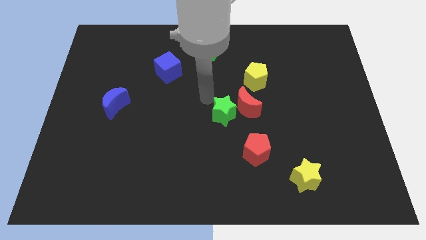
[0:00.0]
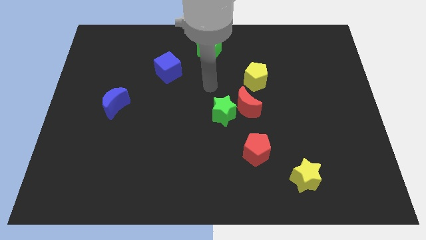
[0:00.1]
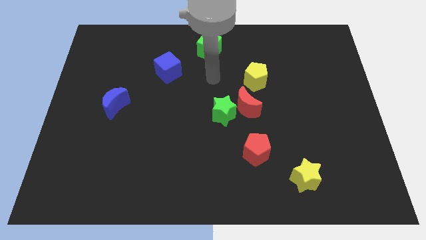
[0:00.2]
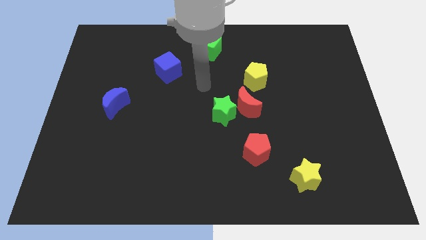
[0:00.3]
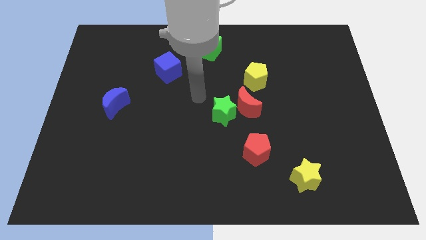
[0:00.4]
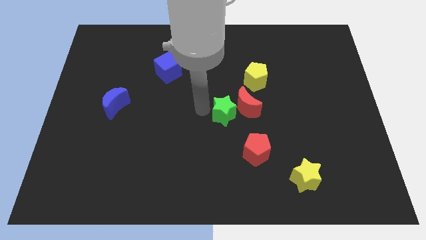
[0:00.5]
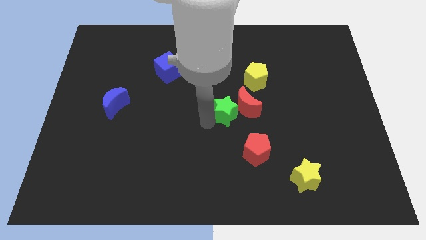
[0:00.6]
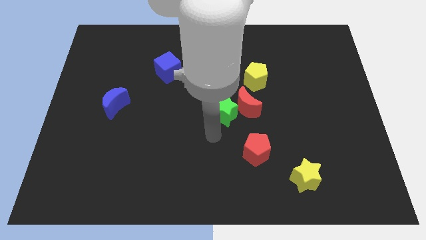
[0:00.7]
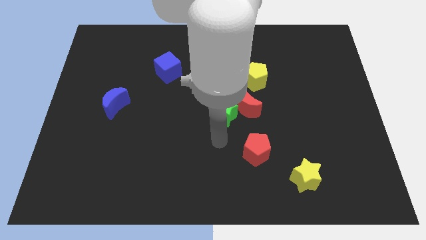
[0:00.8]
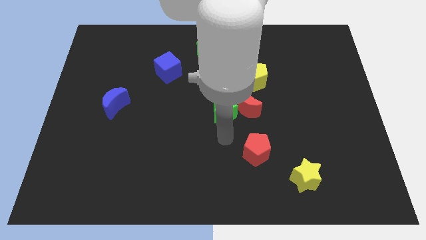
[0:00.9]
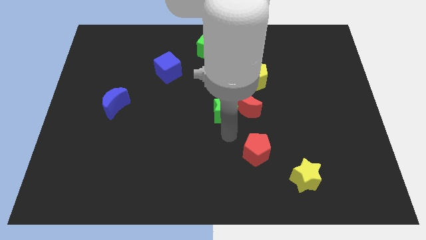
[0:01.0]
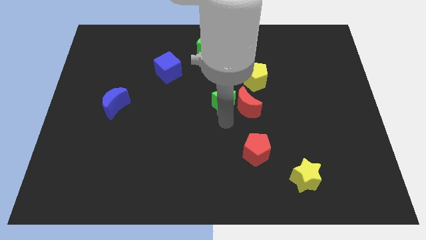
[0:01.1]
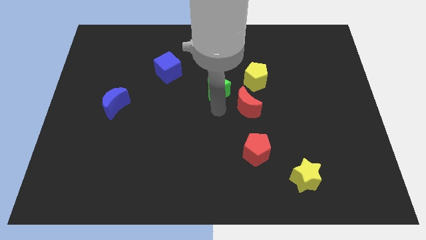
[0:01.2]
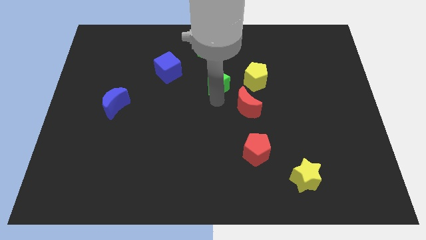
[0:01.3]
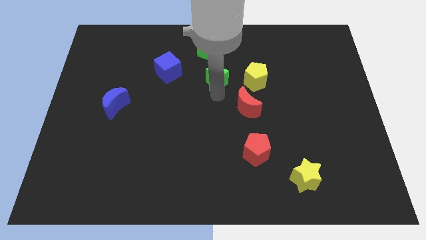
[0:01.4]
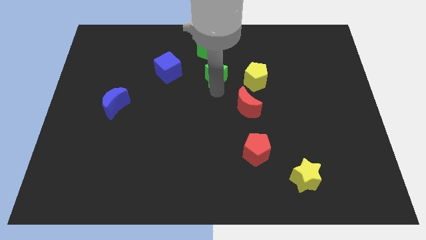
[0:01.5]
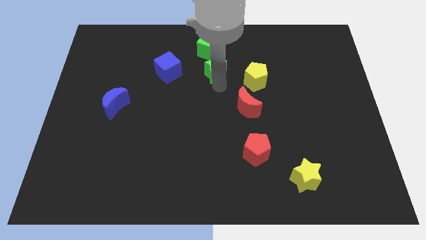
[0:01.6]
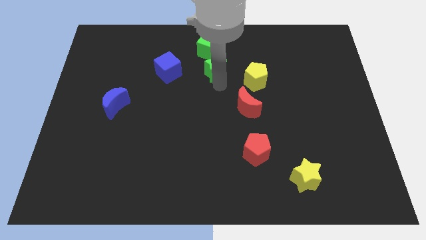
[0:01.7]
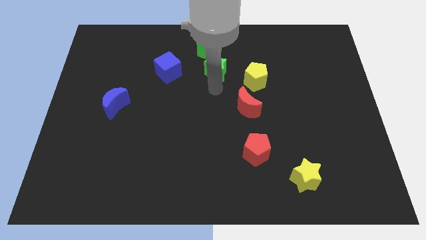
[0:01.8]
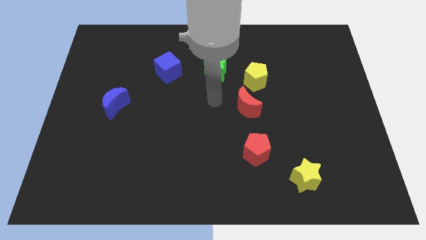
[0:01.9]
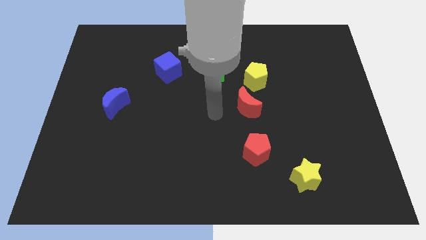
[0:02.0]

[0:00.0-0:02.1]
move the green star below the green cube

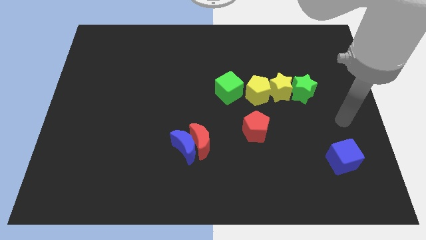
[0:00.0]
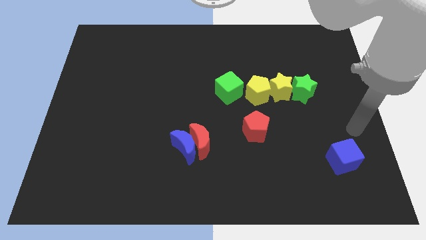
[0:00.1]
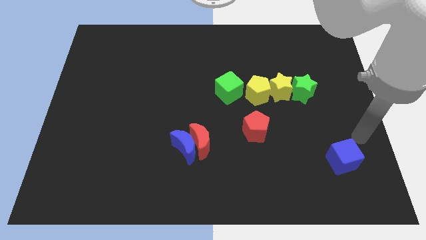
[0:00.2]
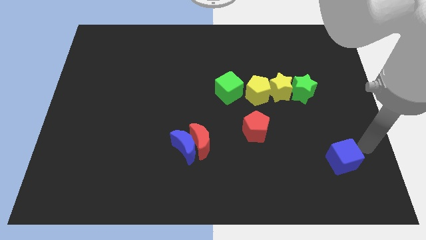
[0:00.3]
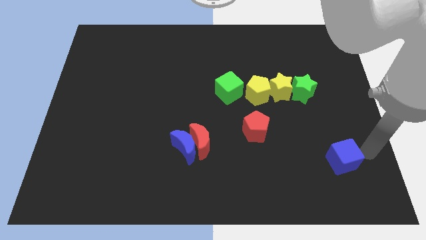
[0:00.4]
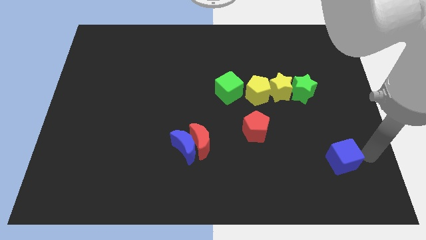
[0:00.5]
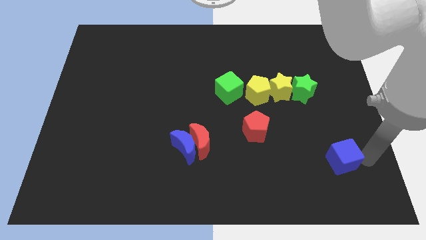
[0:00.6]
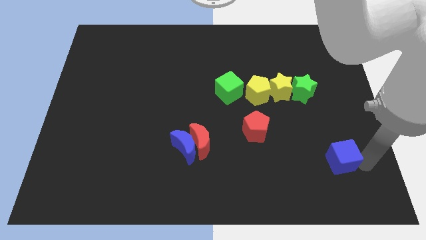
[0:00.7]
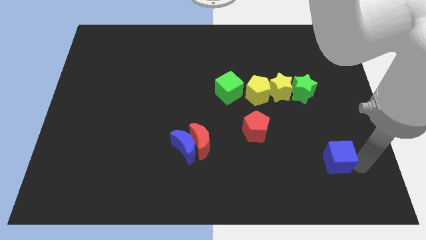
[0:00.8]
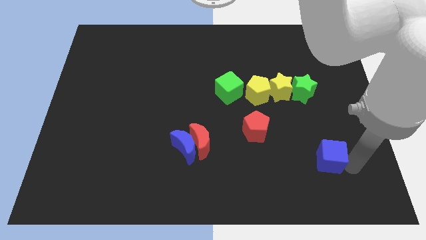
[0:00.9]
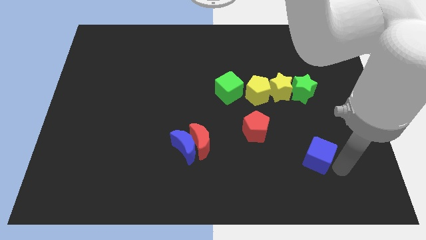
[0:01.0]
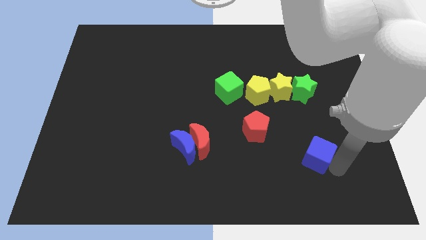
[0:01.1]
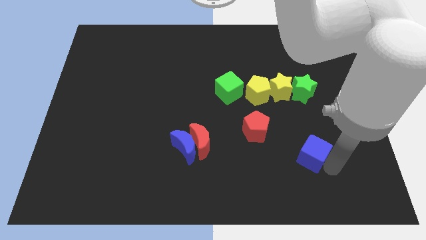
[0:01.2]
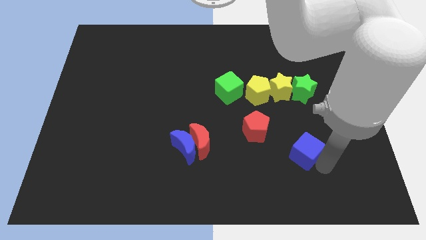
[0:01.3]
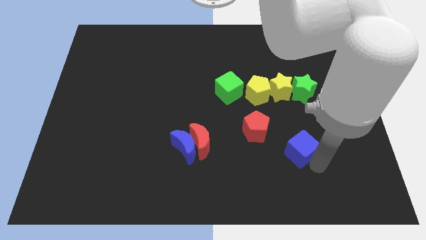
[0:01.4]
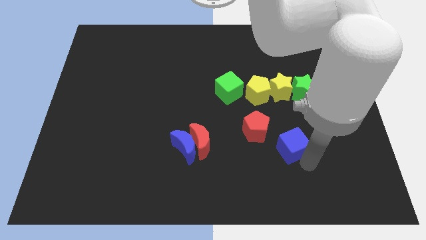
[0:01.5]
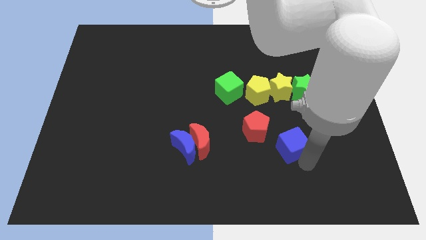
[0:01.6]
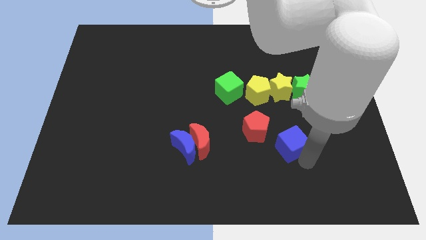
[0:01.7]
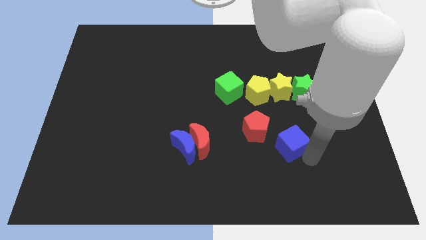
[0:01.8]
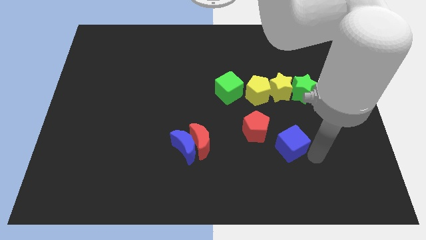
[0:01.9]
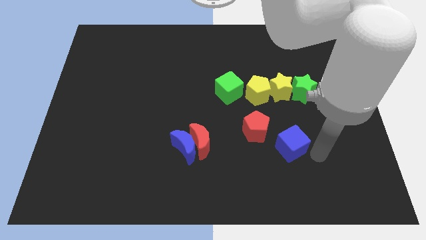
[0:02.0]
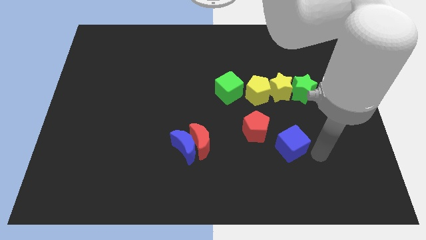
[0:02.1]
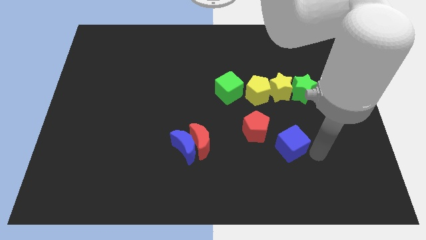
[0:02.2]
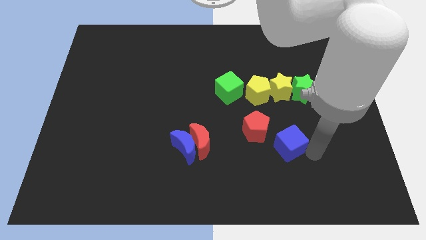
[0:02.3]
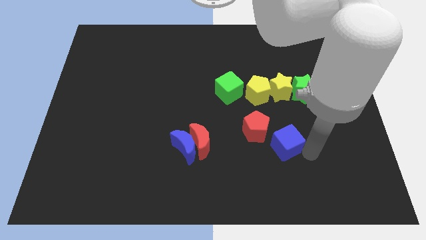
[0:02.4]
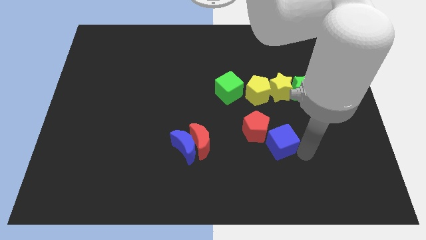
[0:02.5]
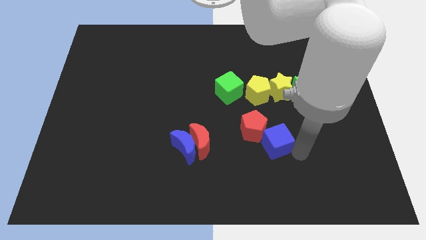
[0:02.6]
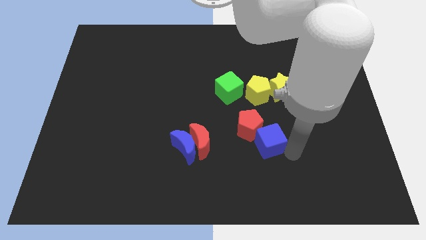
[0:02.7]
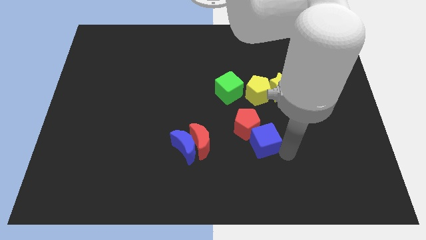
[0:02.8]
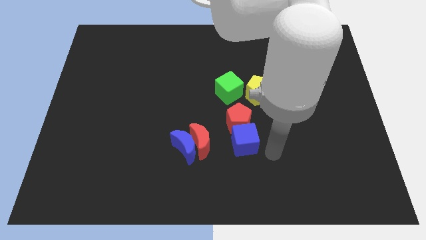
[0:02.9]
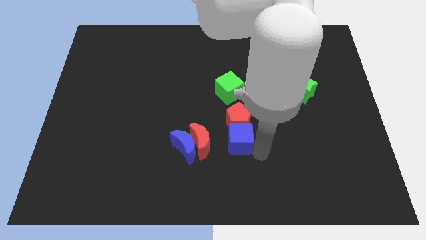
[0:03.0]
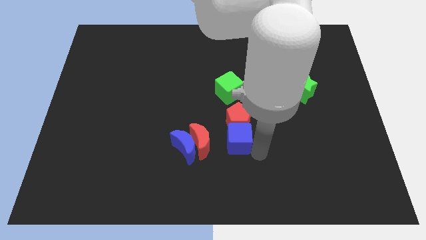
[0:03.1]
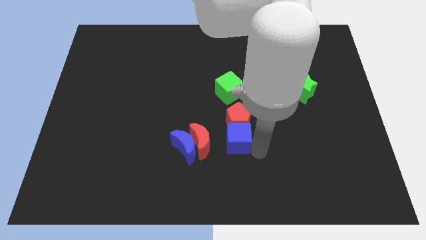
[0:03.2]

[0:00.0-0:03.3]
place the blue cube below the red pentagon

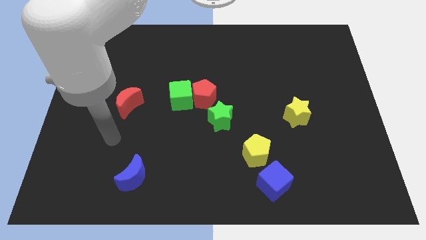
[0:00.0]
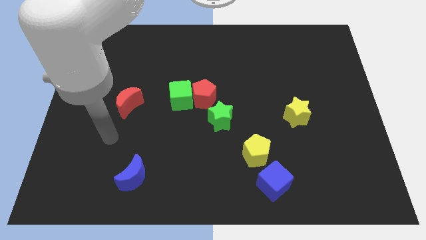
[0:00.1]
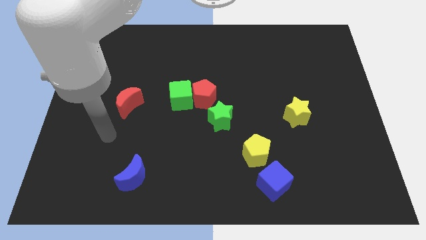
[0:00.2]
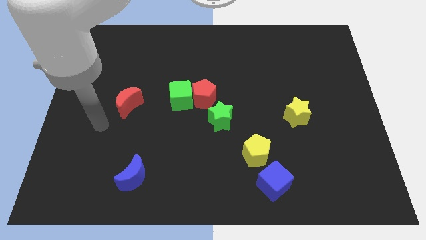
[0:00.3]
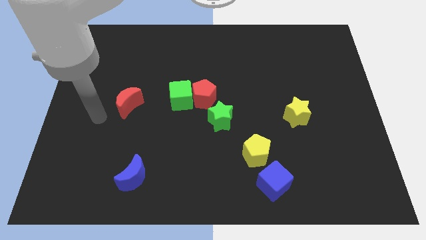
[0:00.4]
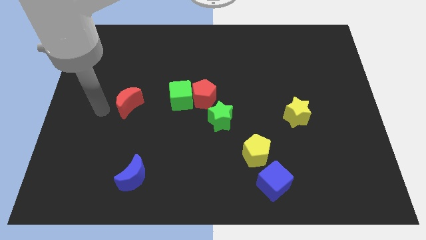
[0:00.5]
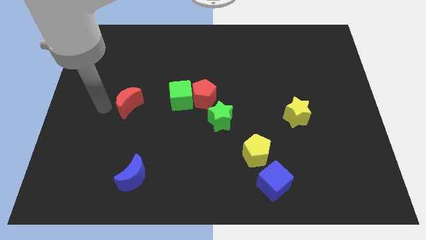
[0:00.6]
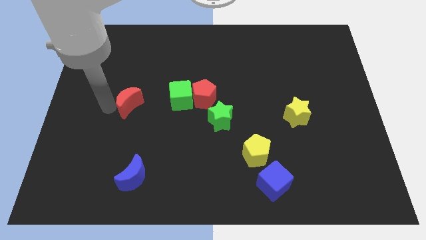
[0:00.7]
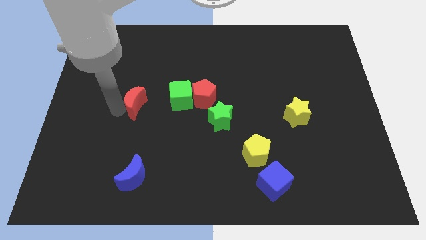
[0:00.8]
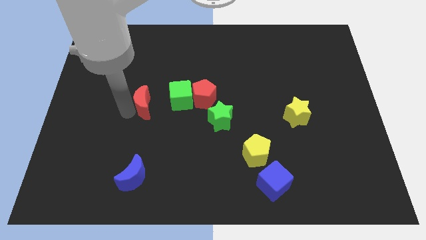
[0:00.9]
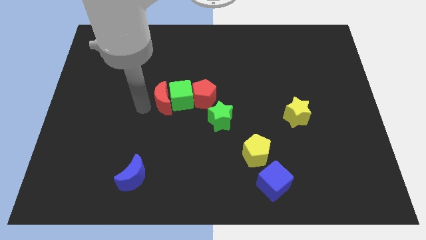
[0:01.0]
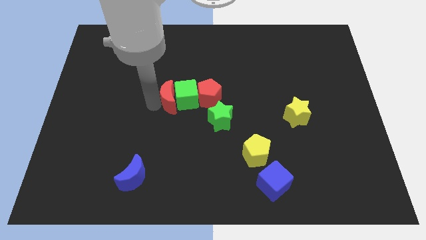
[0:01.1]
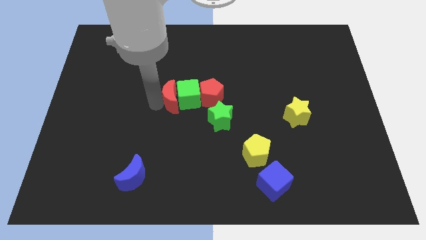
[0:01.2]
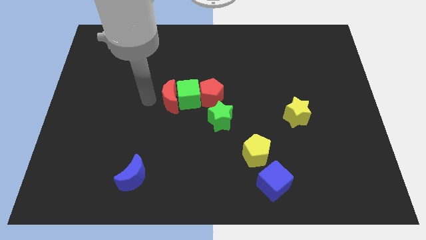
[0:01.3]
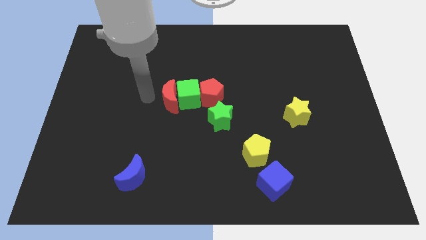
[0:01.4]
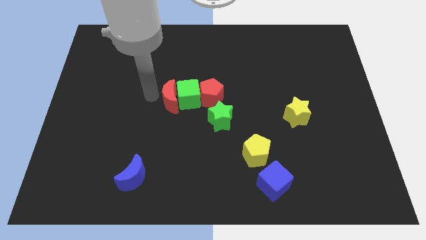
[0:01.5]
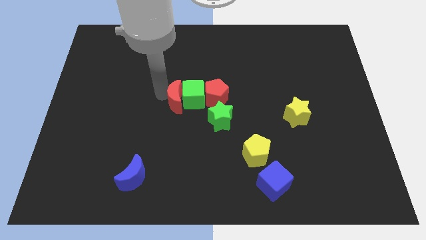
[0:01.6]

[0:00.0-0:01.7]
move the red moon close to green cube

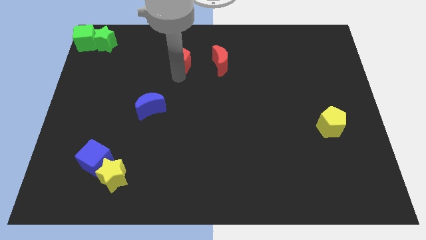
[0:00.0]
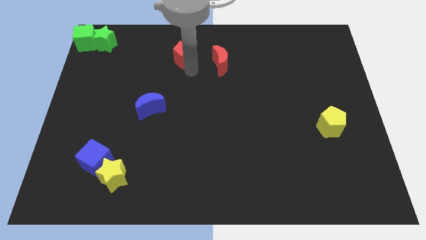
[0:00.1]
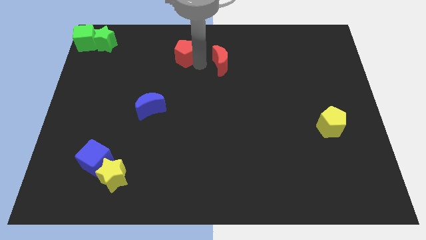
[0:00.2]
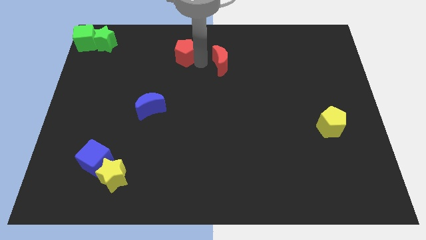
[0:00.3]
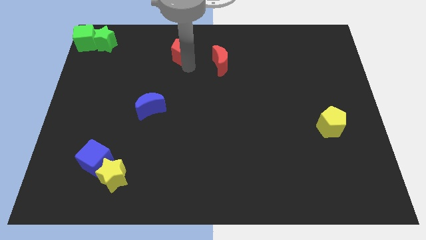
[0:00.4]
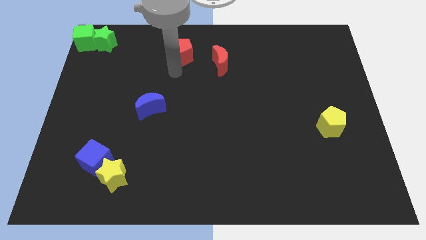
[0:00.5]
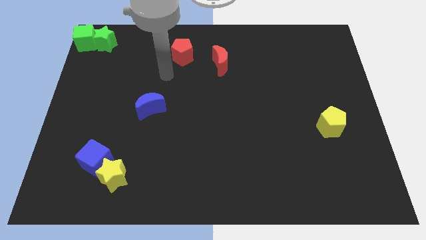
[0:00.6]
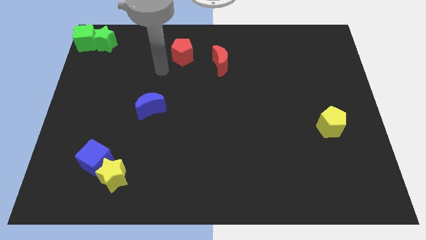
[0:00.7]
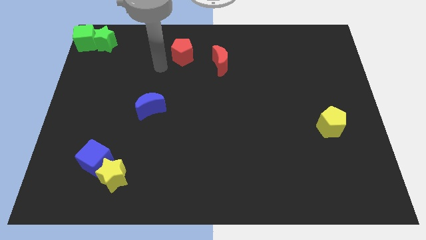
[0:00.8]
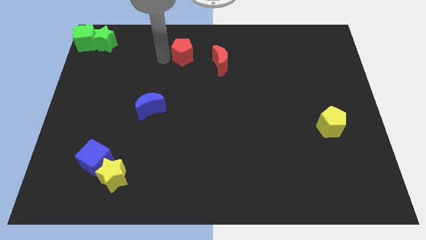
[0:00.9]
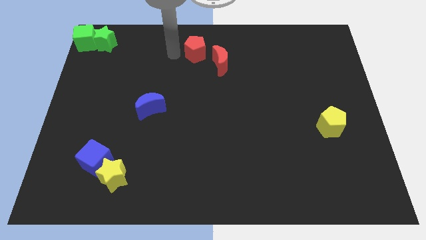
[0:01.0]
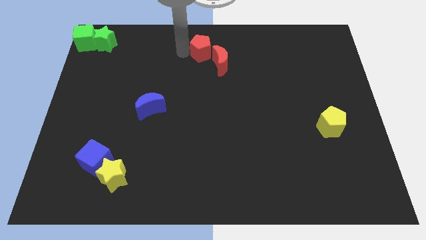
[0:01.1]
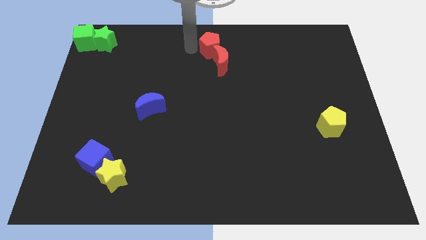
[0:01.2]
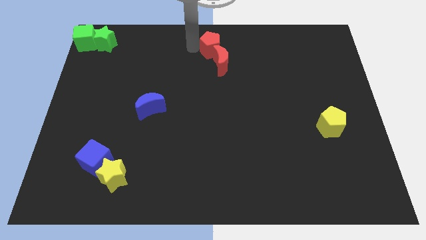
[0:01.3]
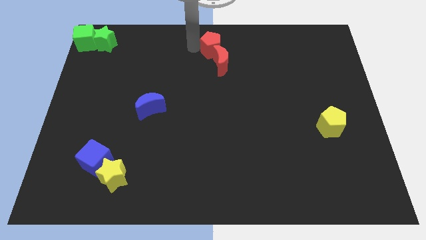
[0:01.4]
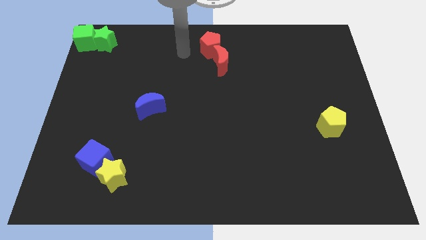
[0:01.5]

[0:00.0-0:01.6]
put the red pentagon at the top center

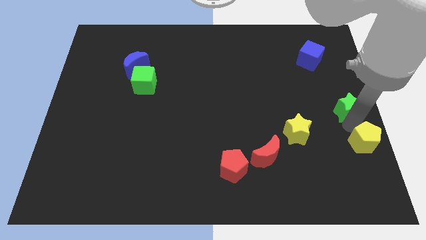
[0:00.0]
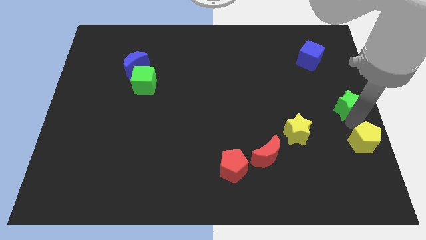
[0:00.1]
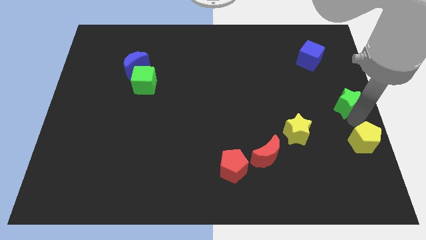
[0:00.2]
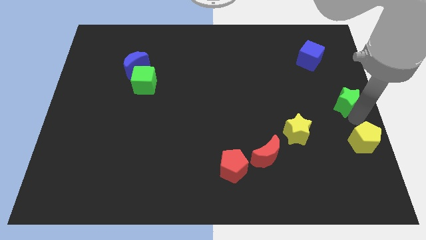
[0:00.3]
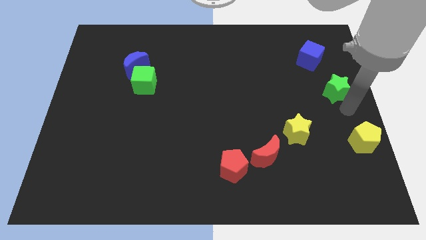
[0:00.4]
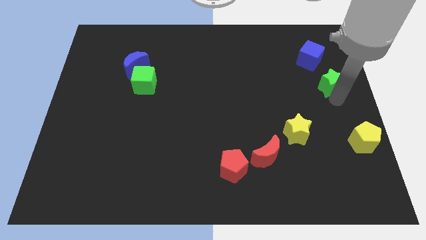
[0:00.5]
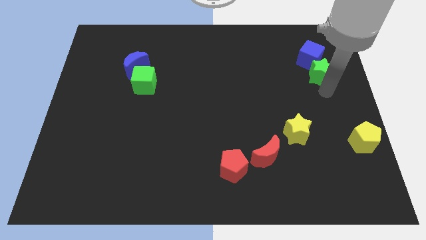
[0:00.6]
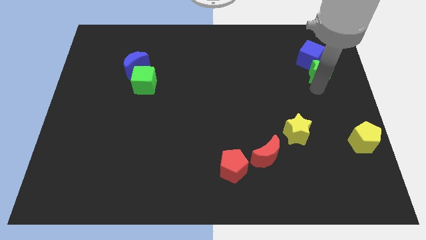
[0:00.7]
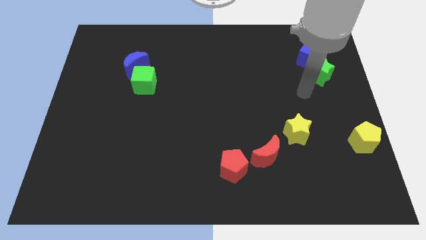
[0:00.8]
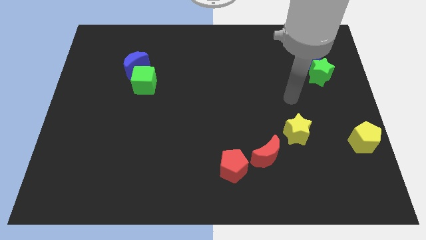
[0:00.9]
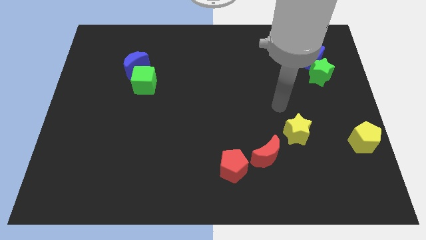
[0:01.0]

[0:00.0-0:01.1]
separate green star from yellow pentagon
